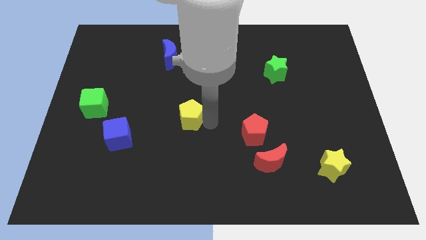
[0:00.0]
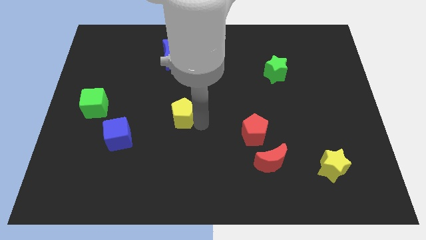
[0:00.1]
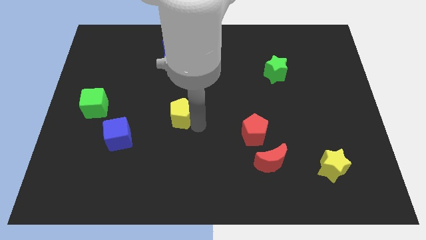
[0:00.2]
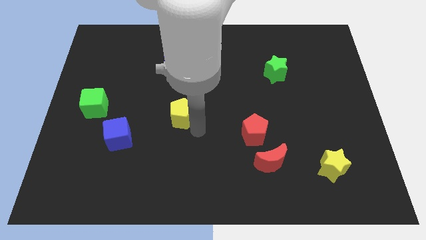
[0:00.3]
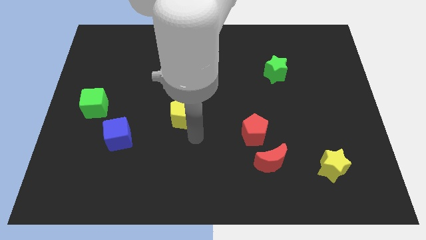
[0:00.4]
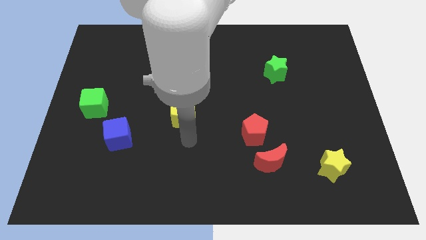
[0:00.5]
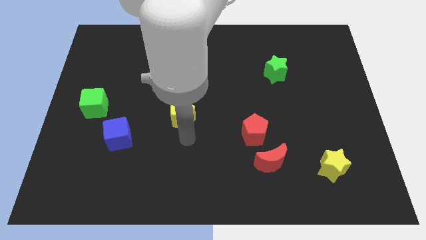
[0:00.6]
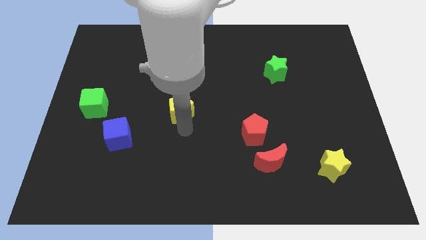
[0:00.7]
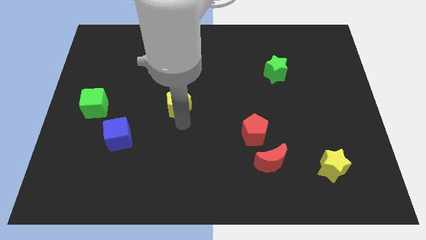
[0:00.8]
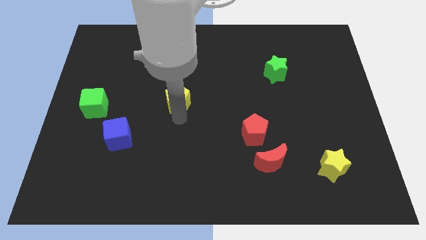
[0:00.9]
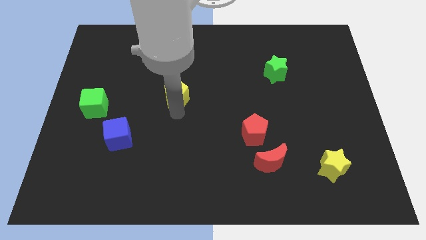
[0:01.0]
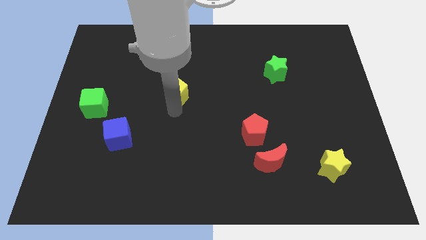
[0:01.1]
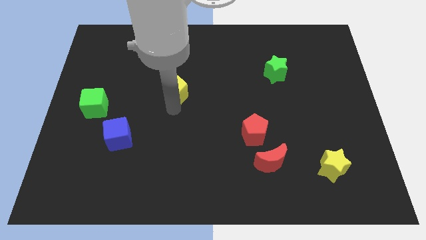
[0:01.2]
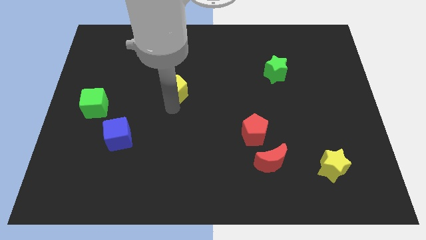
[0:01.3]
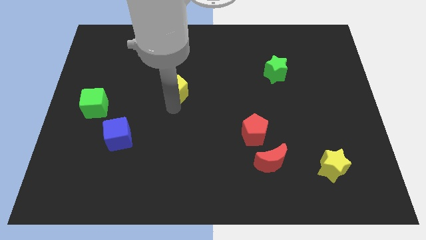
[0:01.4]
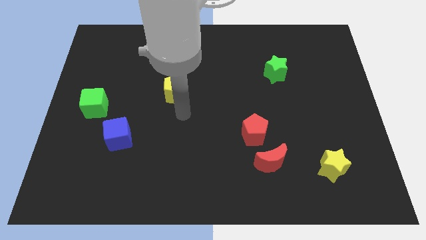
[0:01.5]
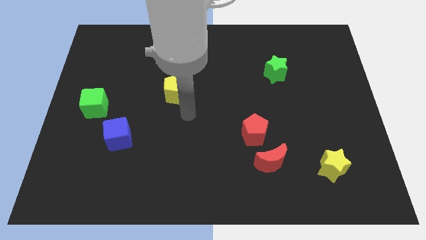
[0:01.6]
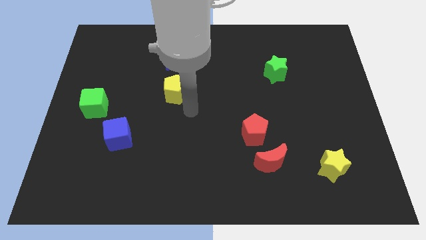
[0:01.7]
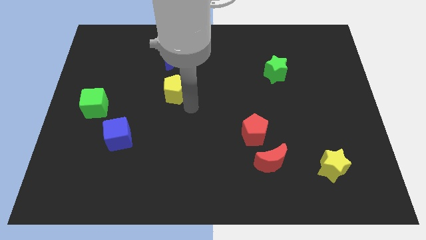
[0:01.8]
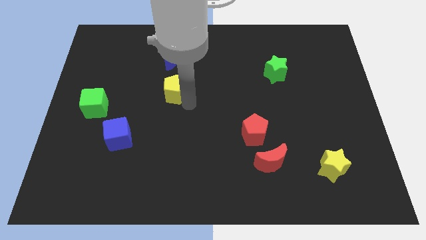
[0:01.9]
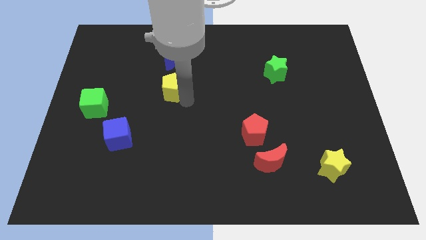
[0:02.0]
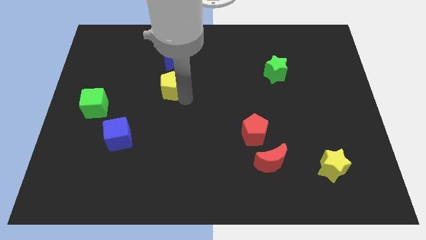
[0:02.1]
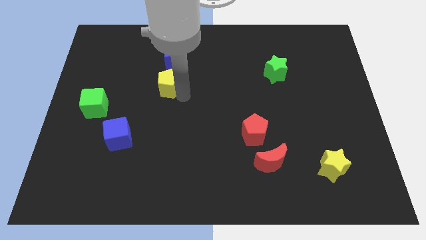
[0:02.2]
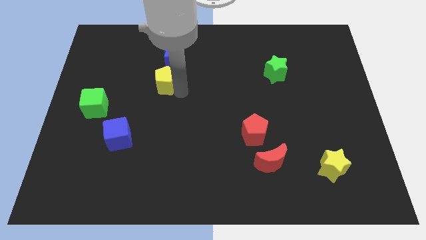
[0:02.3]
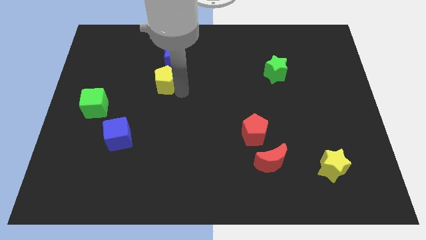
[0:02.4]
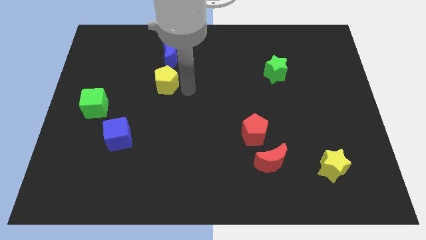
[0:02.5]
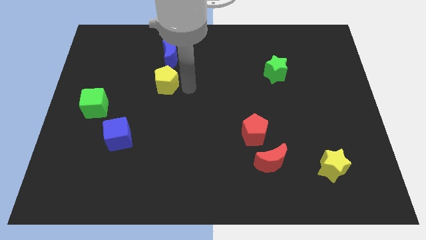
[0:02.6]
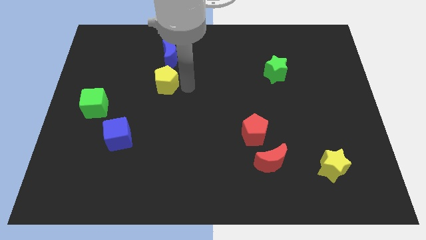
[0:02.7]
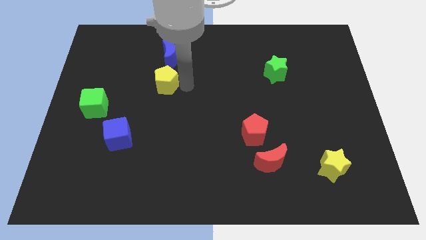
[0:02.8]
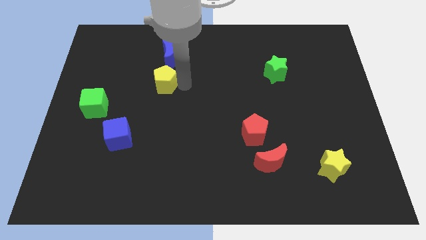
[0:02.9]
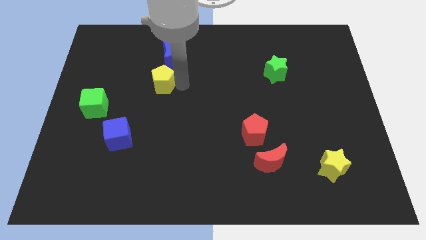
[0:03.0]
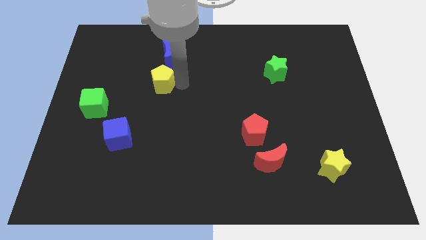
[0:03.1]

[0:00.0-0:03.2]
place yellow pentagon below the blue moon

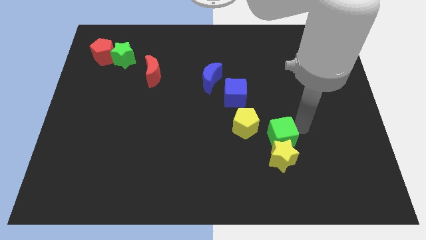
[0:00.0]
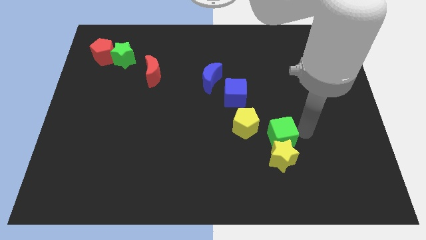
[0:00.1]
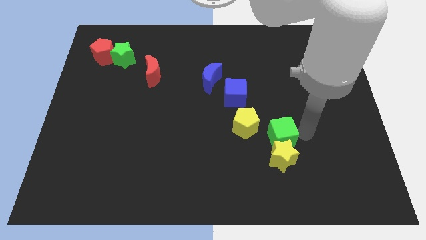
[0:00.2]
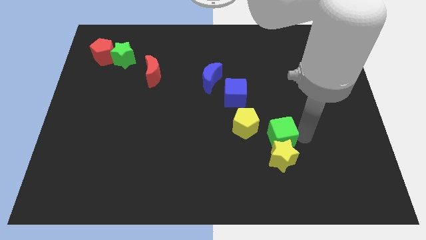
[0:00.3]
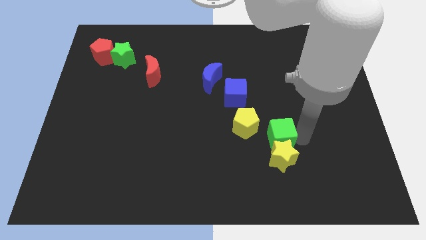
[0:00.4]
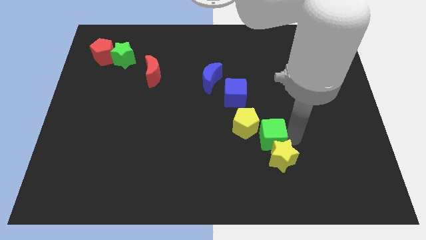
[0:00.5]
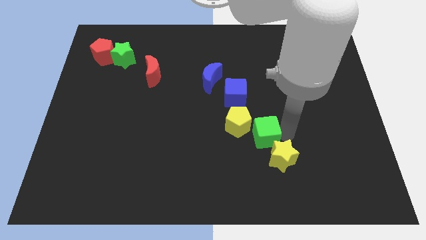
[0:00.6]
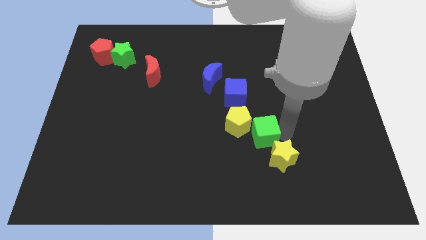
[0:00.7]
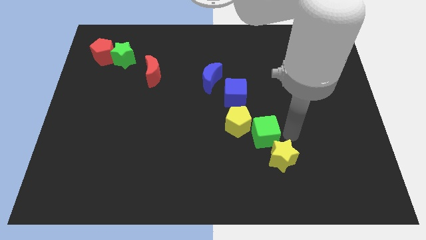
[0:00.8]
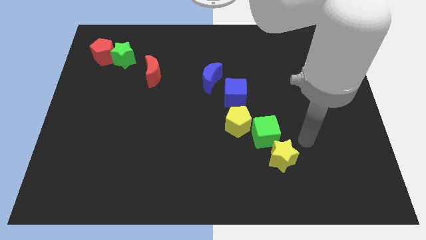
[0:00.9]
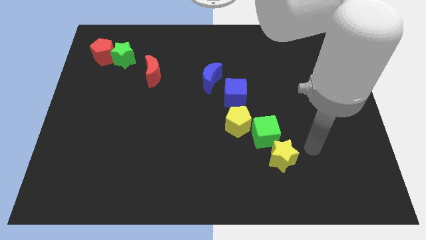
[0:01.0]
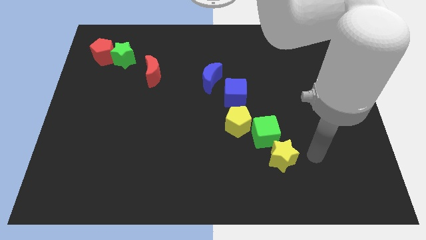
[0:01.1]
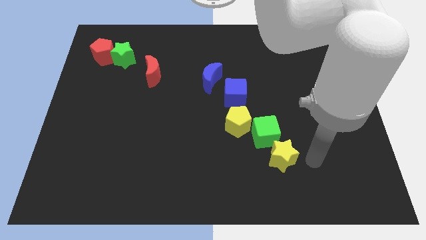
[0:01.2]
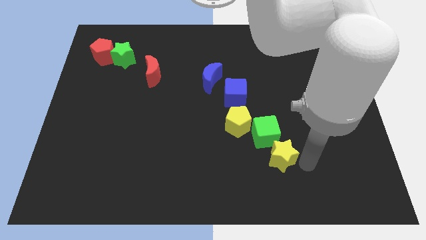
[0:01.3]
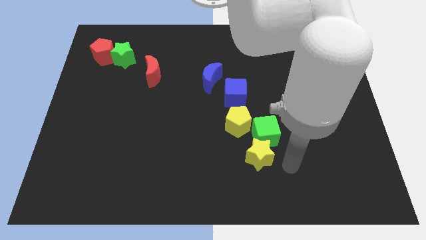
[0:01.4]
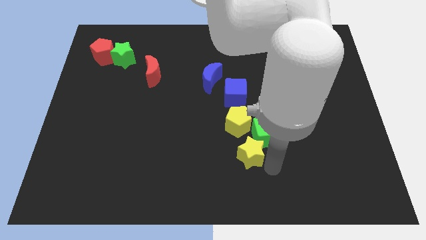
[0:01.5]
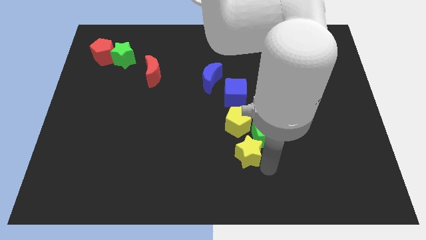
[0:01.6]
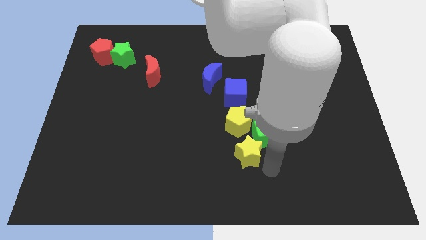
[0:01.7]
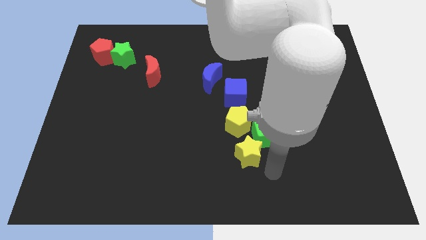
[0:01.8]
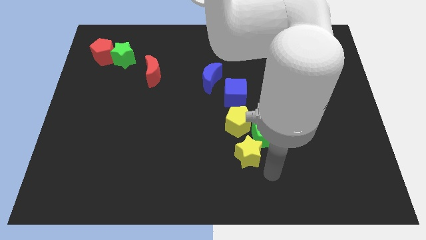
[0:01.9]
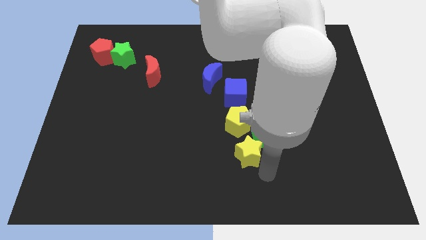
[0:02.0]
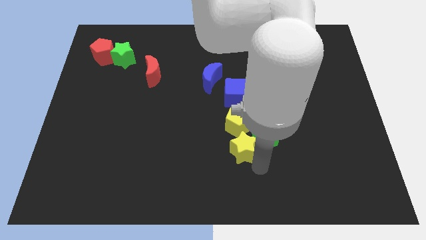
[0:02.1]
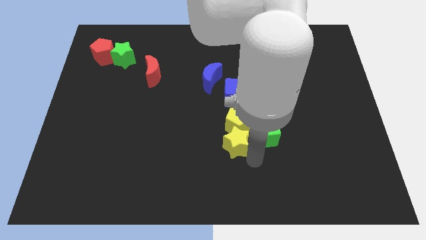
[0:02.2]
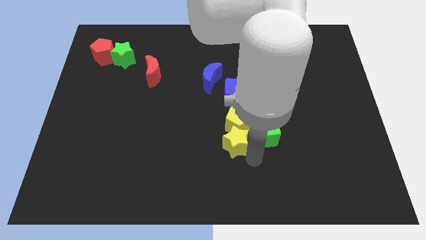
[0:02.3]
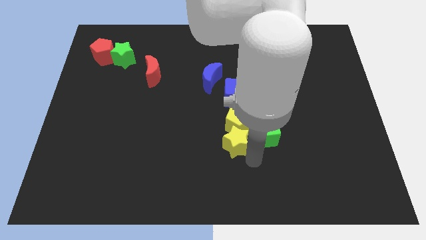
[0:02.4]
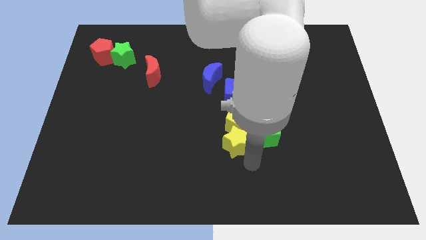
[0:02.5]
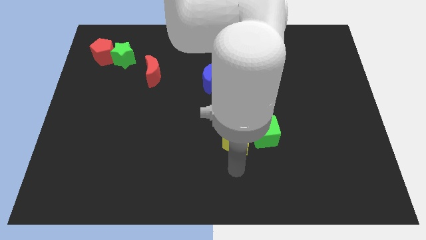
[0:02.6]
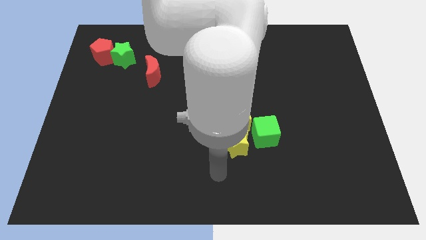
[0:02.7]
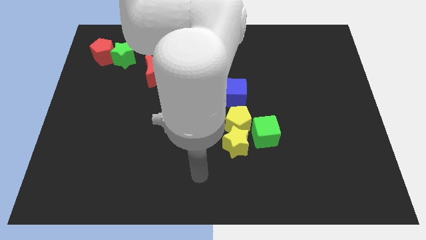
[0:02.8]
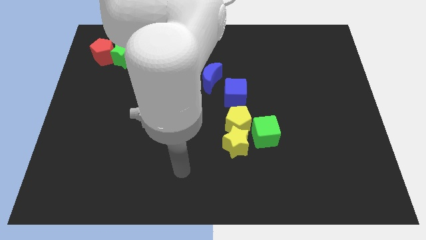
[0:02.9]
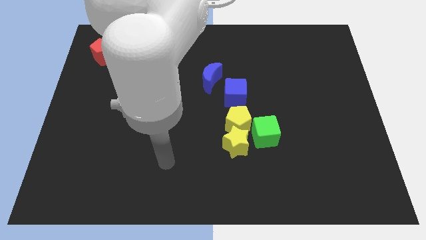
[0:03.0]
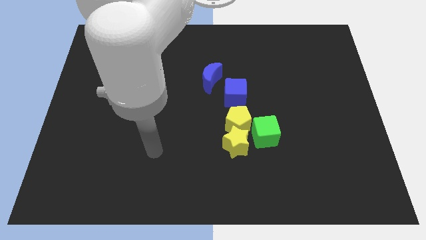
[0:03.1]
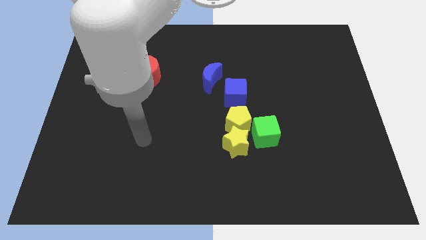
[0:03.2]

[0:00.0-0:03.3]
group up the yellow blocks and green cube below the blue cube

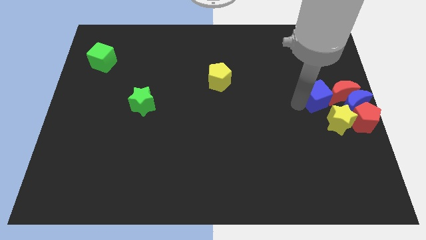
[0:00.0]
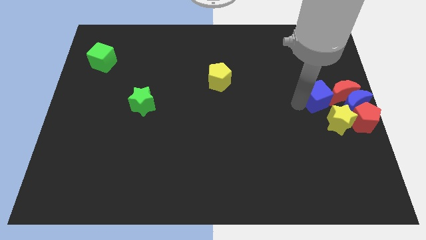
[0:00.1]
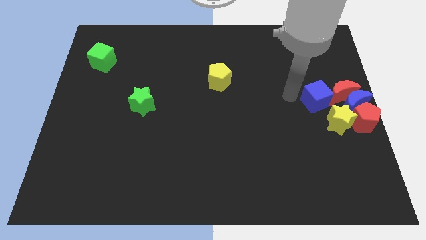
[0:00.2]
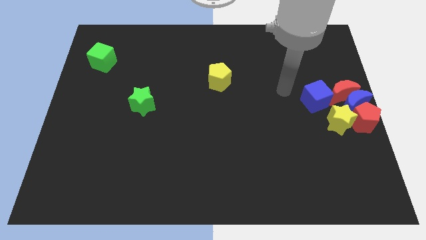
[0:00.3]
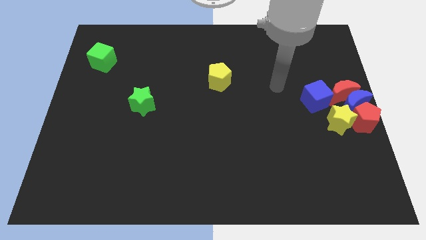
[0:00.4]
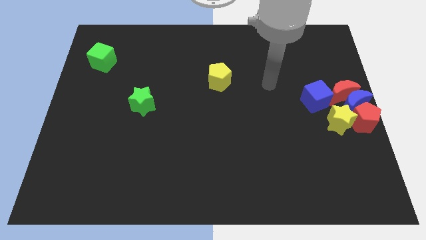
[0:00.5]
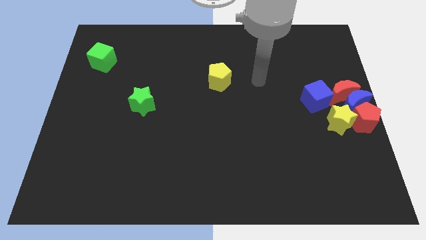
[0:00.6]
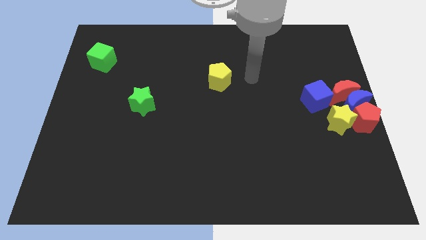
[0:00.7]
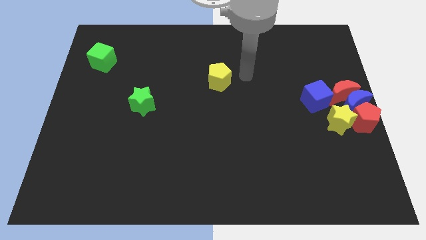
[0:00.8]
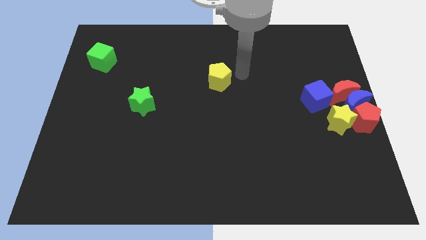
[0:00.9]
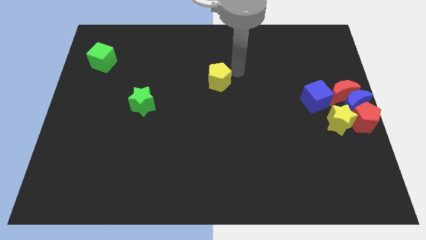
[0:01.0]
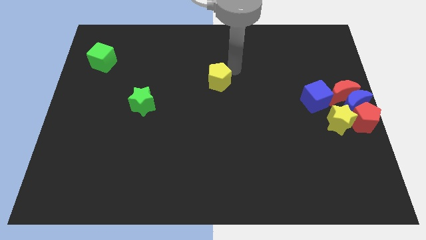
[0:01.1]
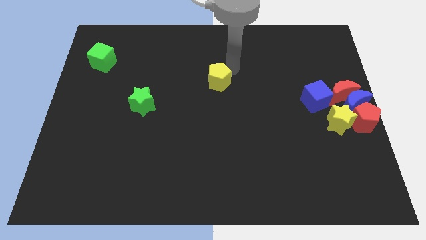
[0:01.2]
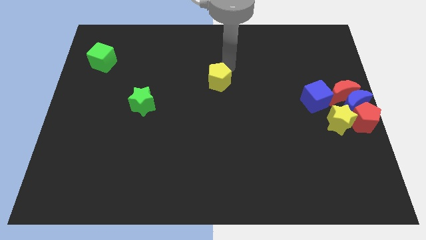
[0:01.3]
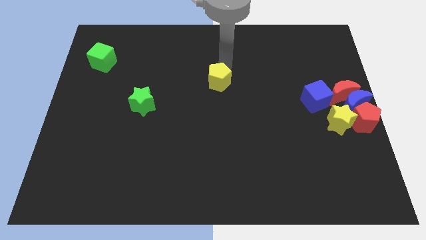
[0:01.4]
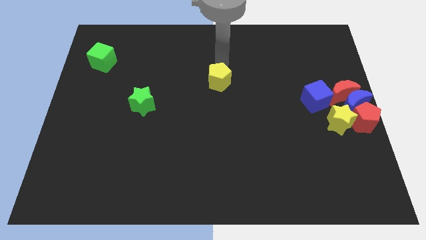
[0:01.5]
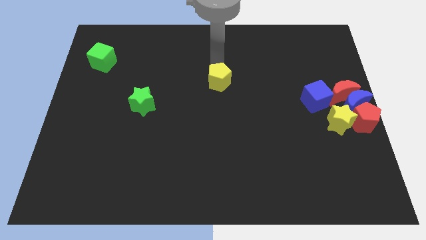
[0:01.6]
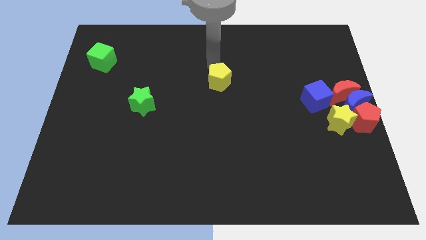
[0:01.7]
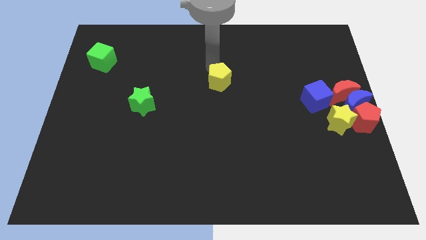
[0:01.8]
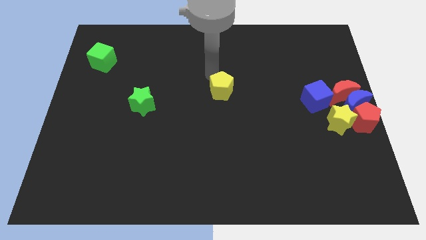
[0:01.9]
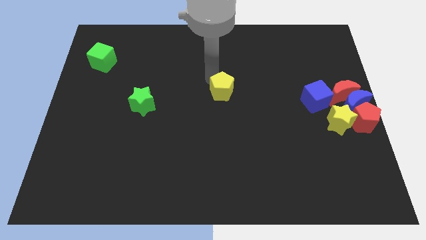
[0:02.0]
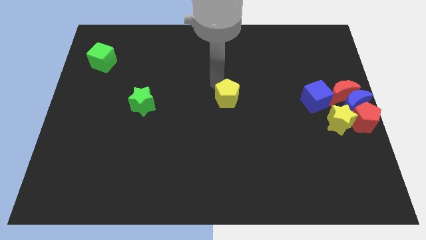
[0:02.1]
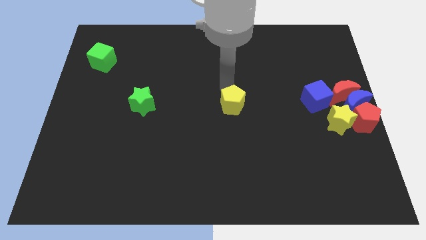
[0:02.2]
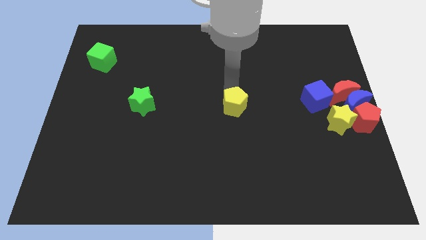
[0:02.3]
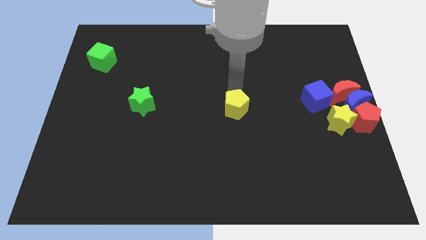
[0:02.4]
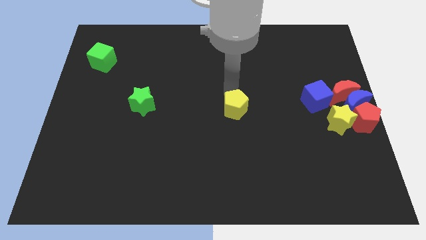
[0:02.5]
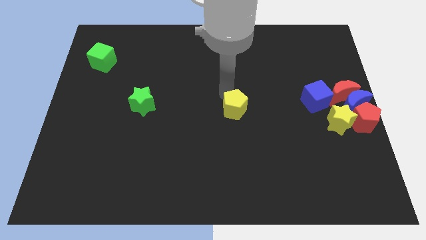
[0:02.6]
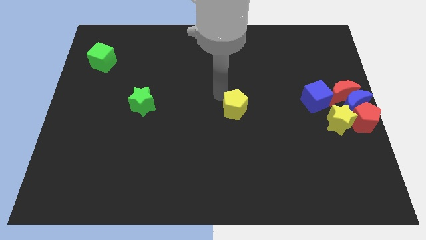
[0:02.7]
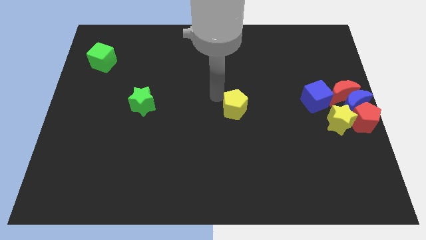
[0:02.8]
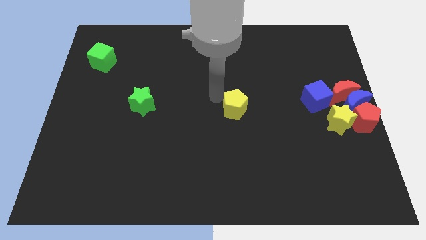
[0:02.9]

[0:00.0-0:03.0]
place the yellow pentagon in between the blue cube and green star
